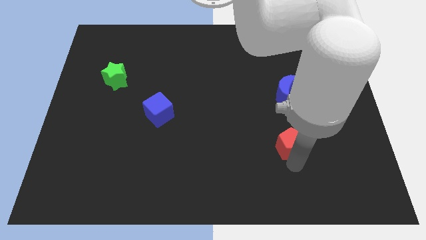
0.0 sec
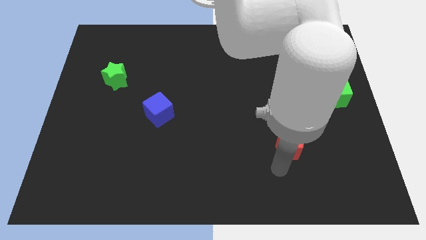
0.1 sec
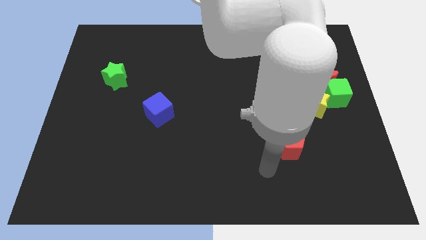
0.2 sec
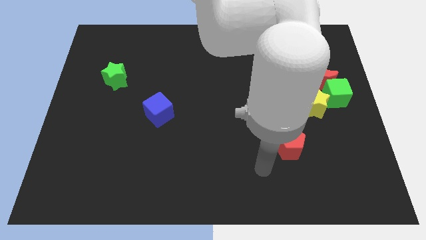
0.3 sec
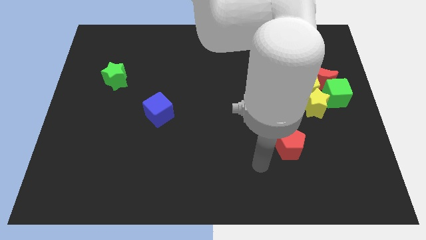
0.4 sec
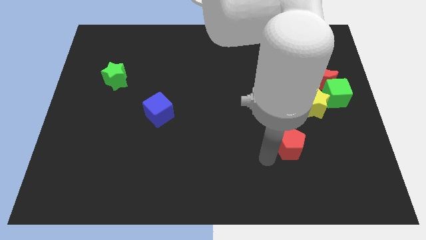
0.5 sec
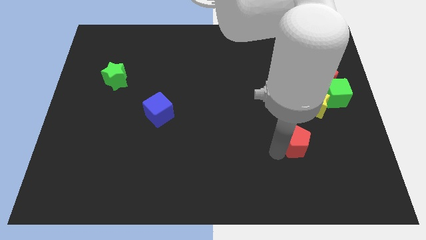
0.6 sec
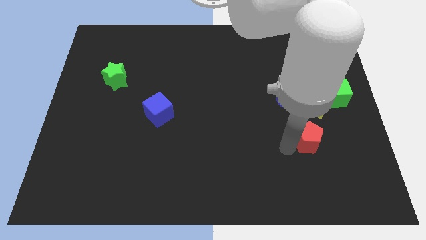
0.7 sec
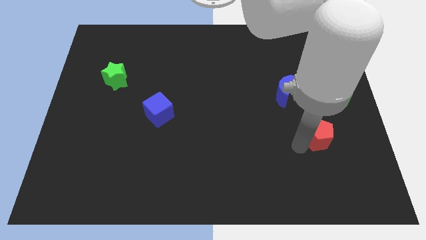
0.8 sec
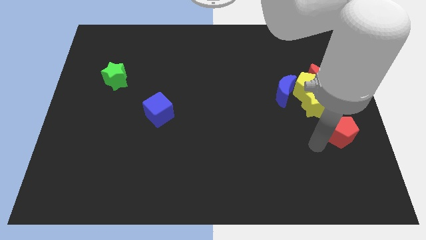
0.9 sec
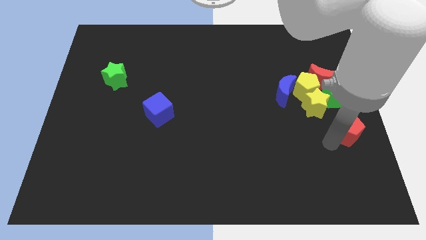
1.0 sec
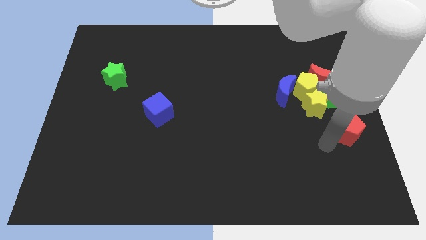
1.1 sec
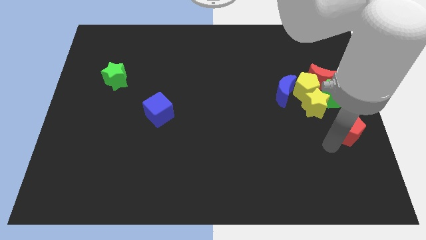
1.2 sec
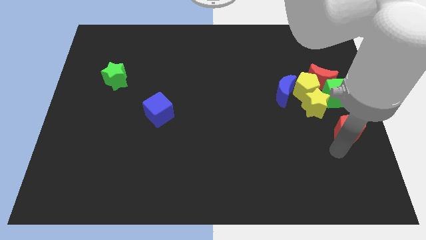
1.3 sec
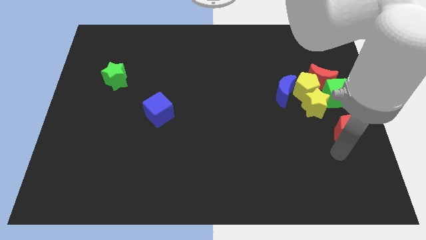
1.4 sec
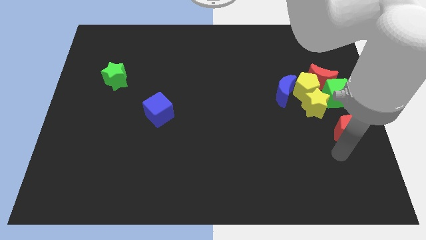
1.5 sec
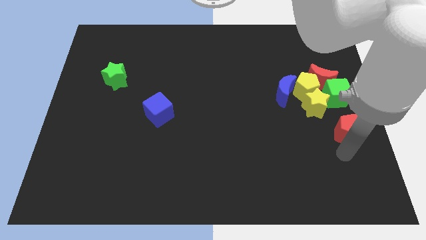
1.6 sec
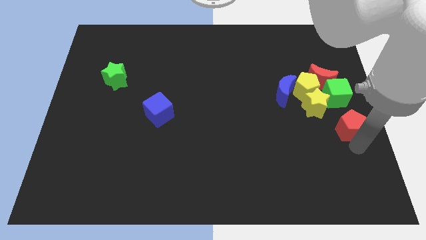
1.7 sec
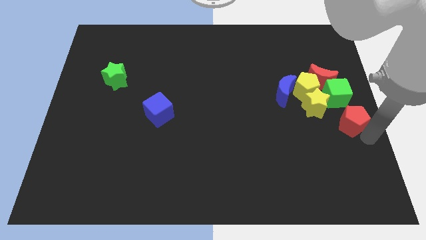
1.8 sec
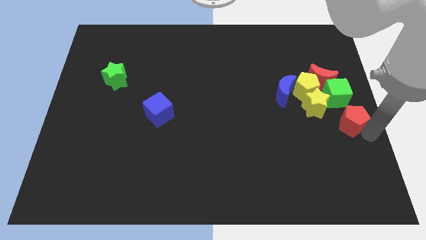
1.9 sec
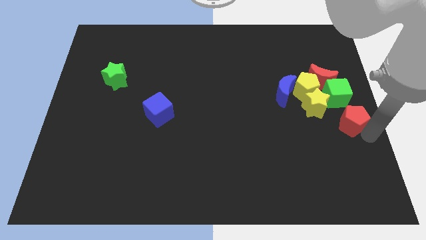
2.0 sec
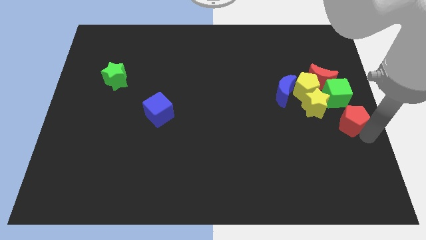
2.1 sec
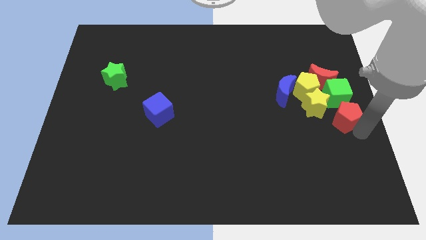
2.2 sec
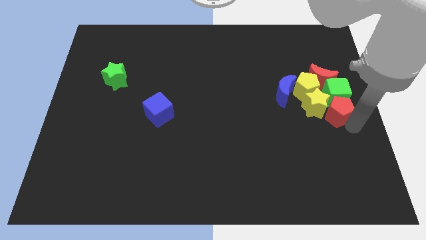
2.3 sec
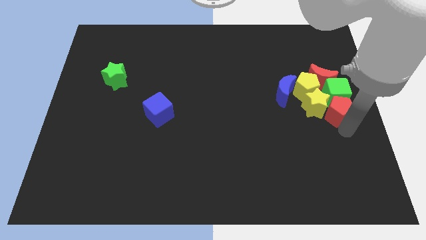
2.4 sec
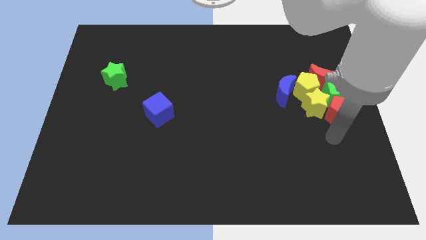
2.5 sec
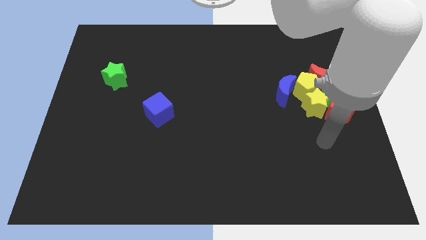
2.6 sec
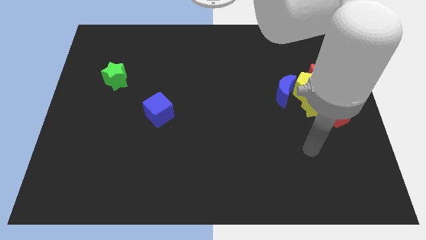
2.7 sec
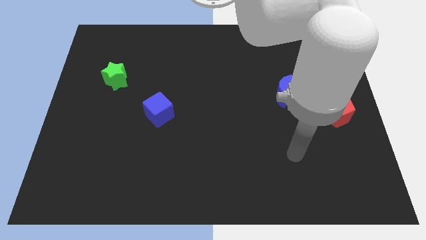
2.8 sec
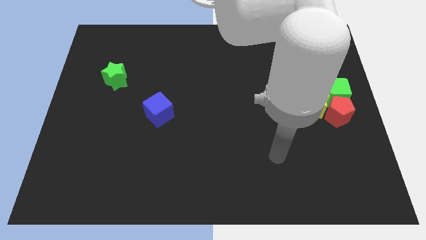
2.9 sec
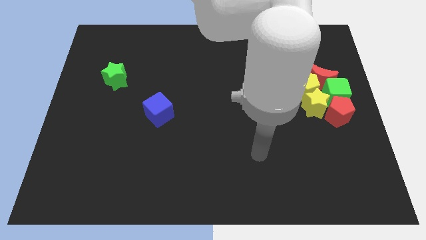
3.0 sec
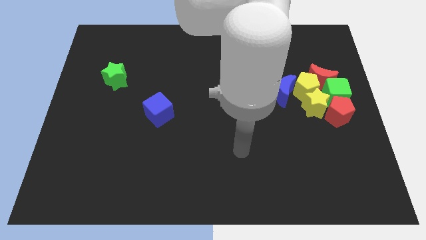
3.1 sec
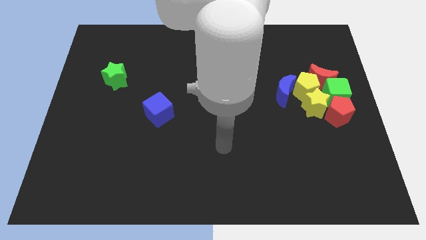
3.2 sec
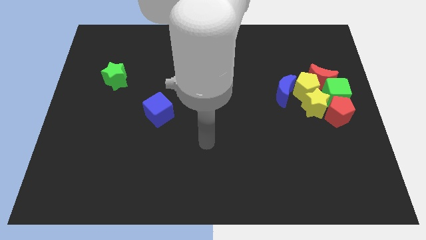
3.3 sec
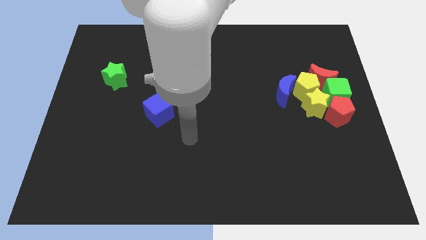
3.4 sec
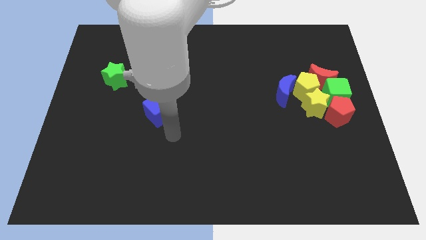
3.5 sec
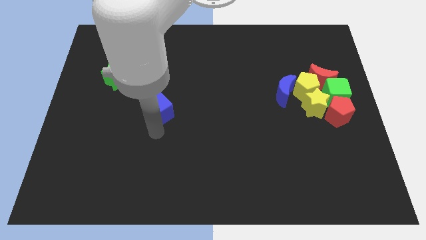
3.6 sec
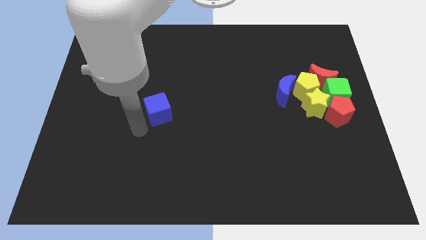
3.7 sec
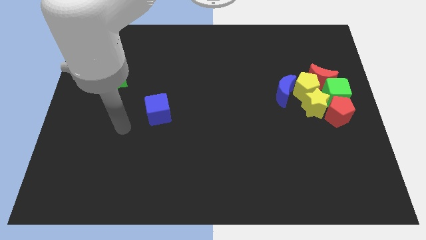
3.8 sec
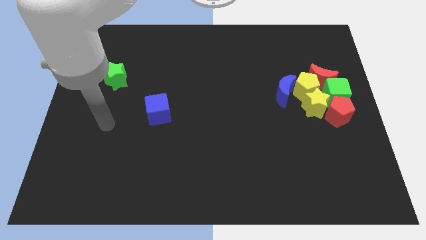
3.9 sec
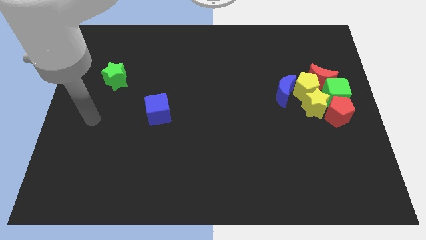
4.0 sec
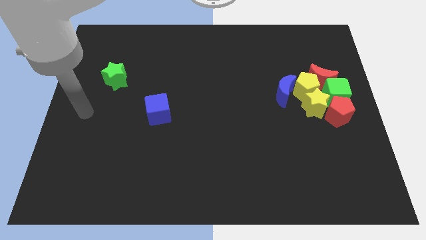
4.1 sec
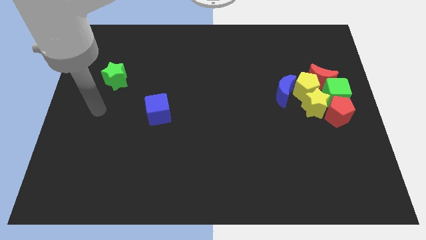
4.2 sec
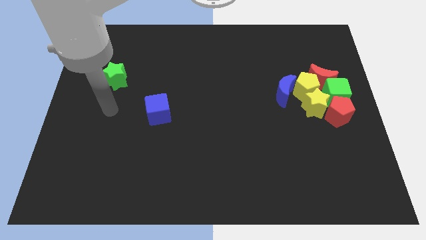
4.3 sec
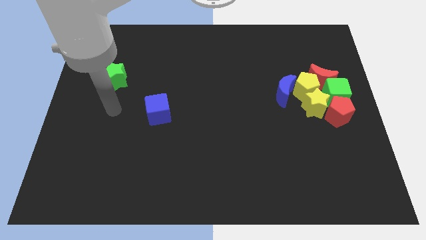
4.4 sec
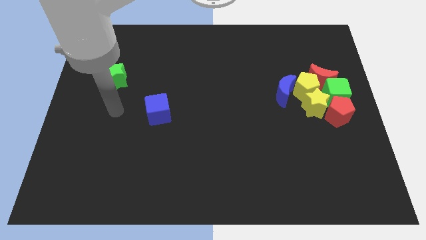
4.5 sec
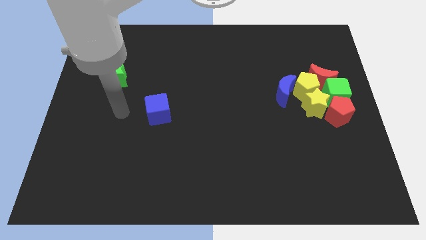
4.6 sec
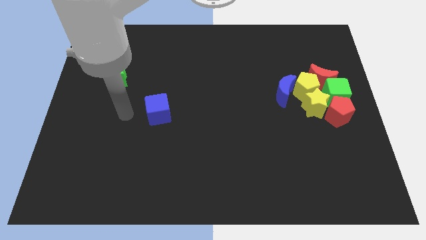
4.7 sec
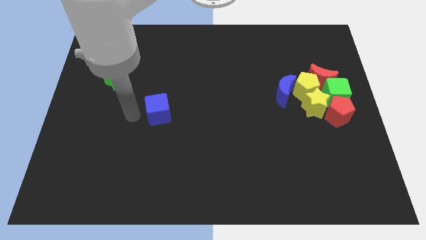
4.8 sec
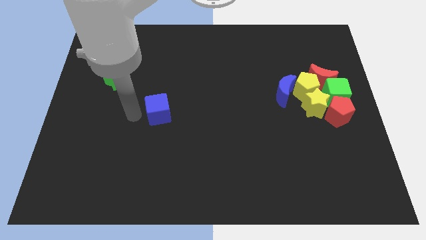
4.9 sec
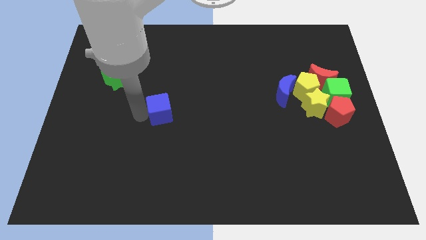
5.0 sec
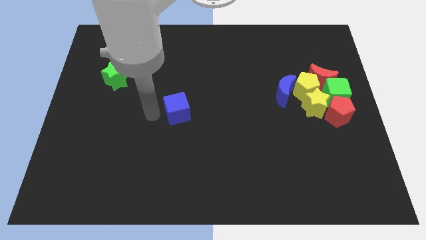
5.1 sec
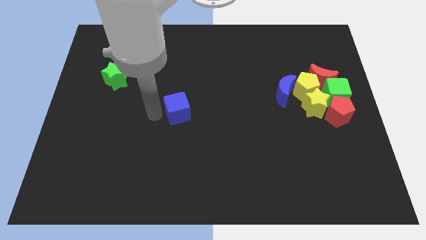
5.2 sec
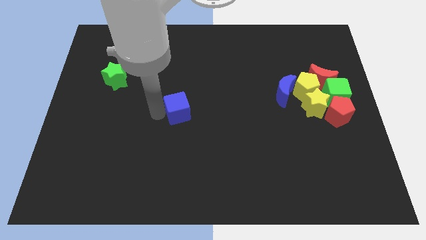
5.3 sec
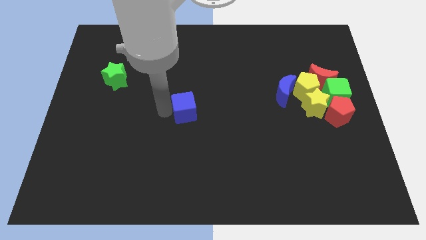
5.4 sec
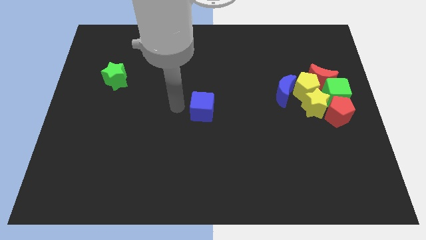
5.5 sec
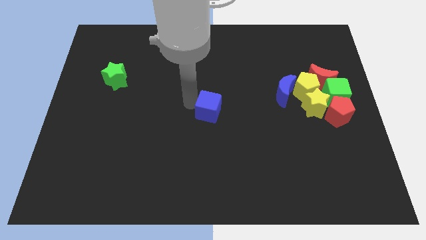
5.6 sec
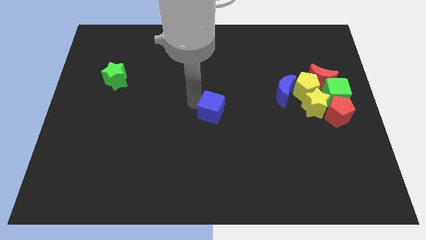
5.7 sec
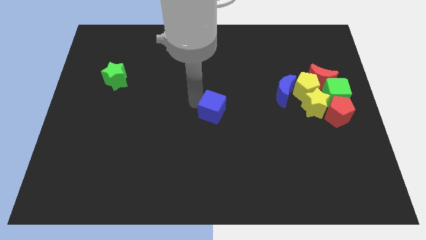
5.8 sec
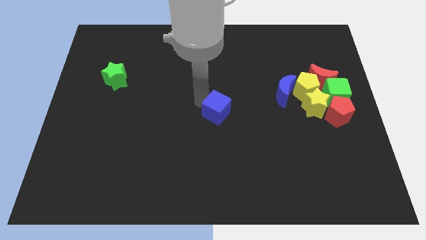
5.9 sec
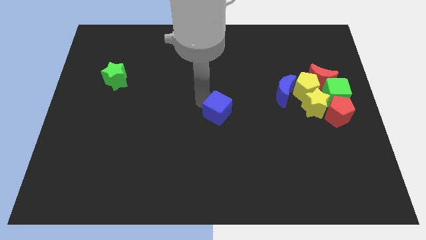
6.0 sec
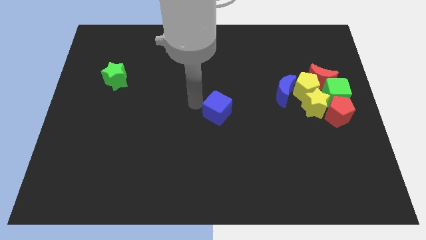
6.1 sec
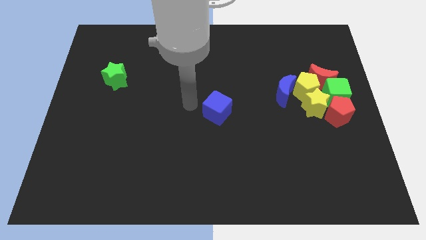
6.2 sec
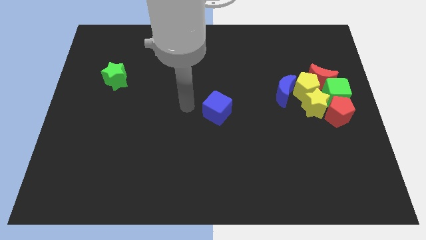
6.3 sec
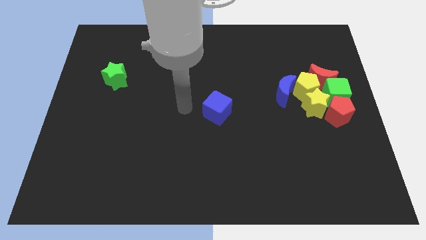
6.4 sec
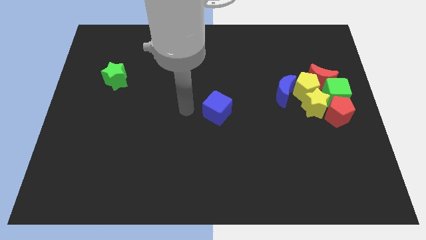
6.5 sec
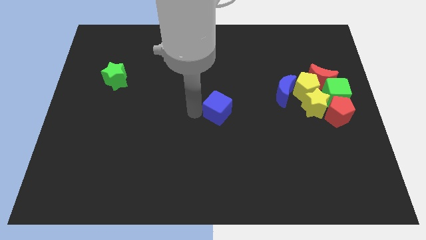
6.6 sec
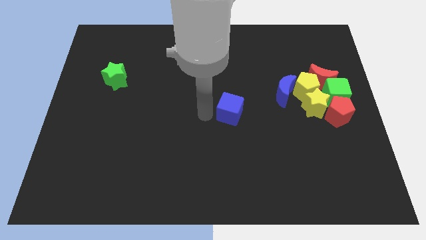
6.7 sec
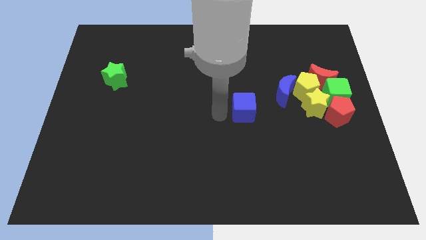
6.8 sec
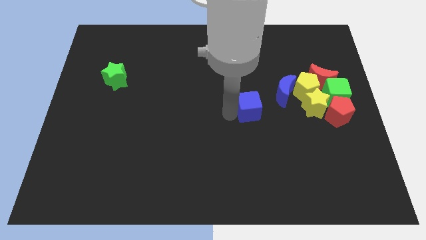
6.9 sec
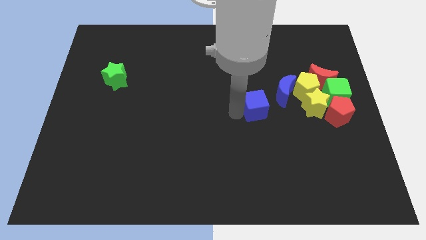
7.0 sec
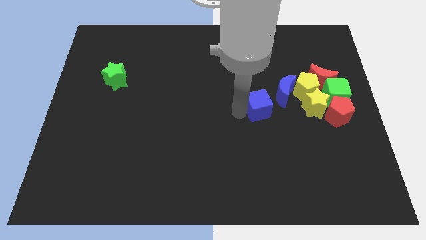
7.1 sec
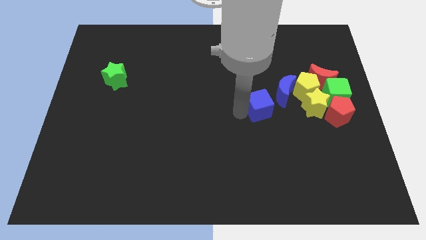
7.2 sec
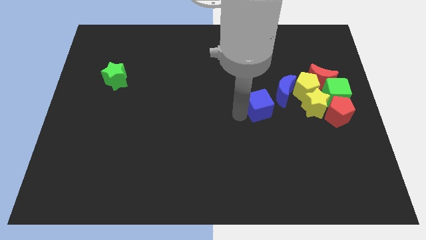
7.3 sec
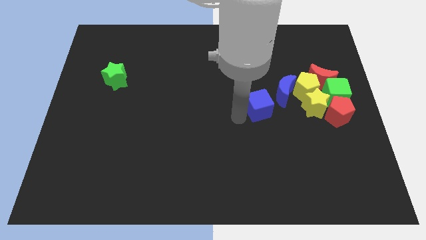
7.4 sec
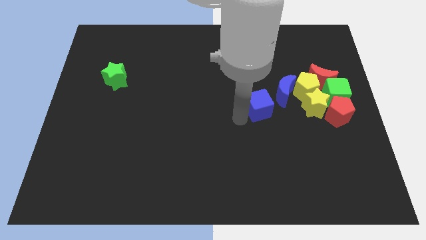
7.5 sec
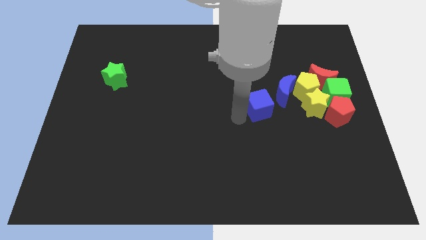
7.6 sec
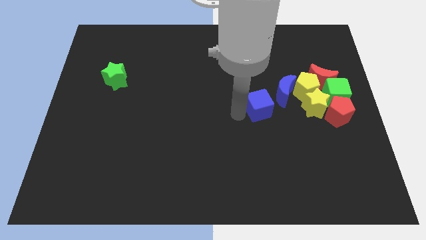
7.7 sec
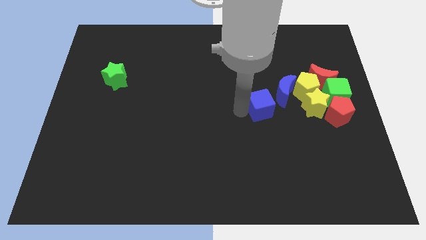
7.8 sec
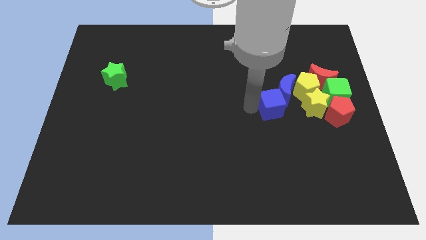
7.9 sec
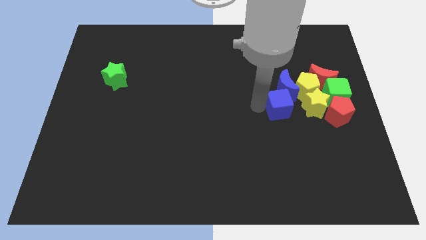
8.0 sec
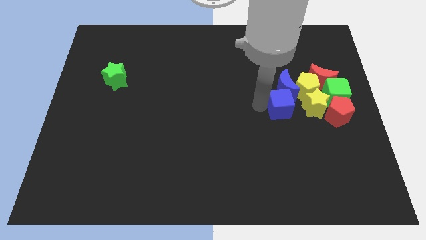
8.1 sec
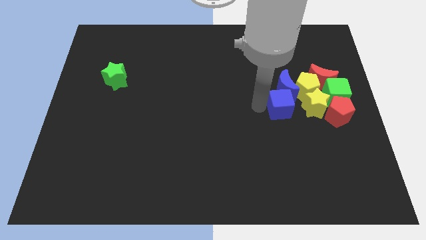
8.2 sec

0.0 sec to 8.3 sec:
group up all the blocks at the right side of the table except the green star

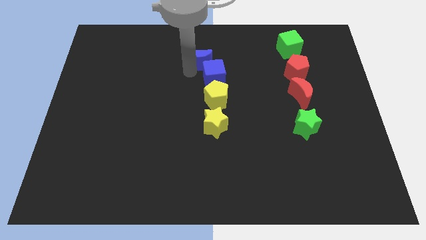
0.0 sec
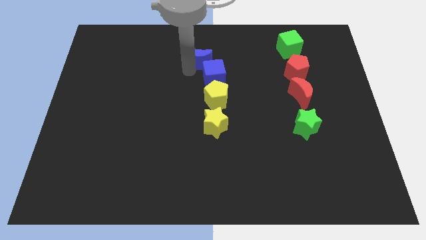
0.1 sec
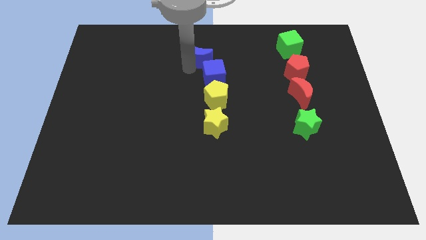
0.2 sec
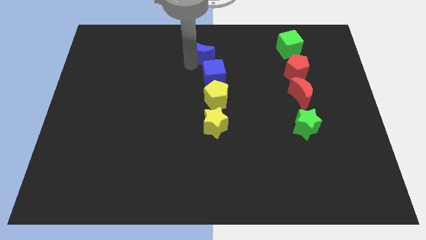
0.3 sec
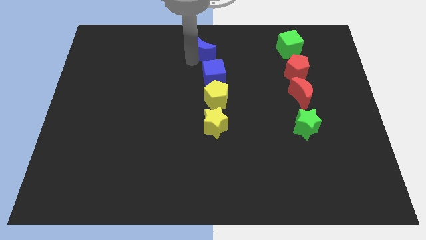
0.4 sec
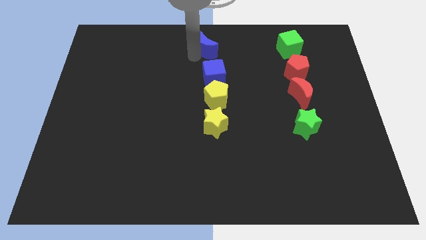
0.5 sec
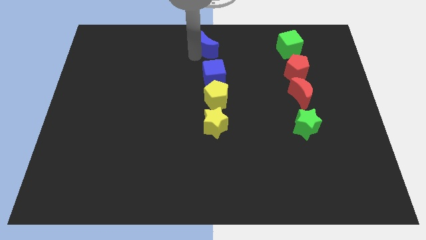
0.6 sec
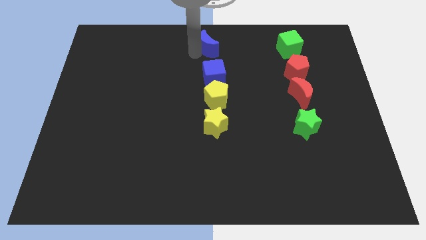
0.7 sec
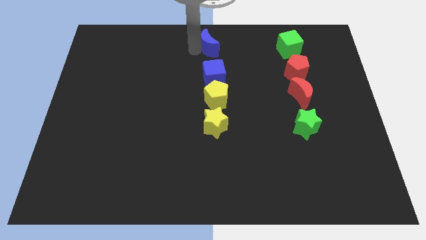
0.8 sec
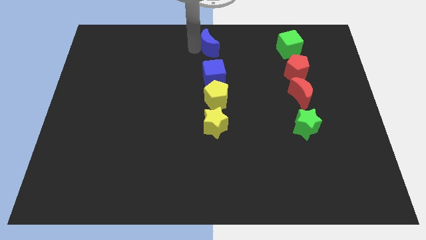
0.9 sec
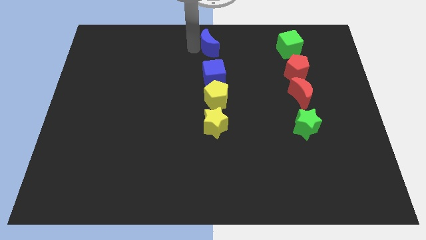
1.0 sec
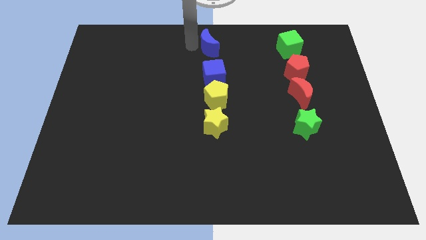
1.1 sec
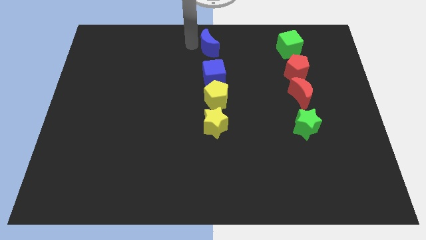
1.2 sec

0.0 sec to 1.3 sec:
place the blue moon parallel to green cube
